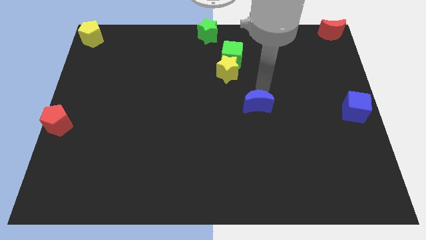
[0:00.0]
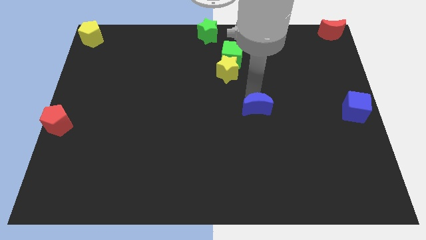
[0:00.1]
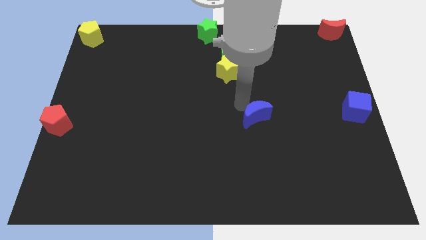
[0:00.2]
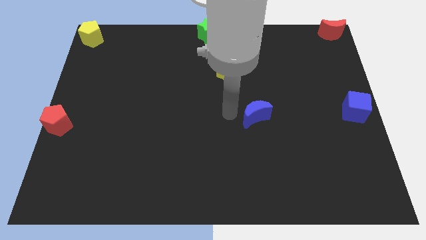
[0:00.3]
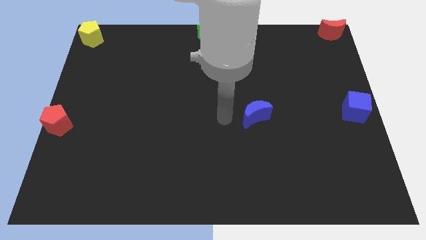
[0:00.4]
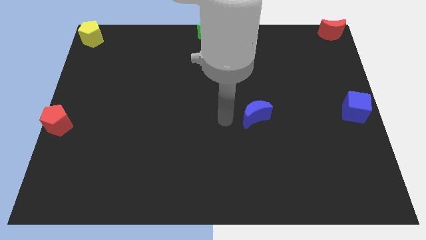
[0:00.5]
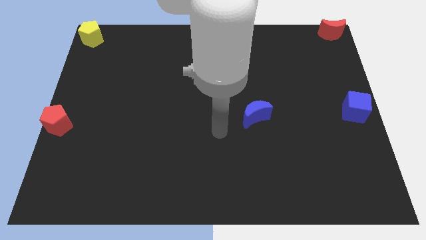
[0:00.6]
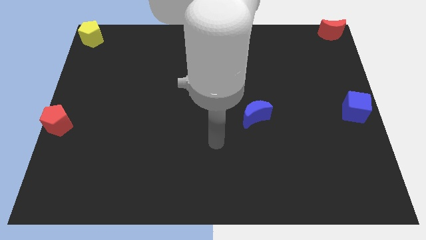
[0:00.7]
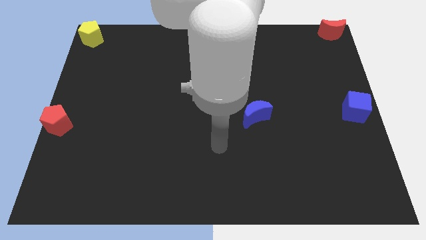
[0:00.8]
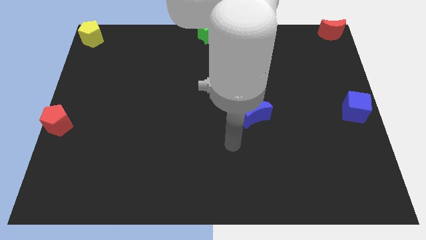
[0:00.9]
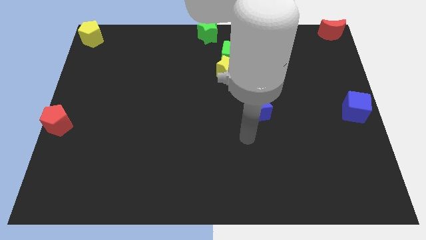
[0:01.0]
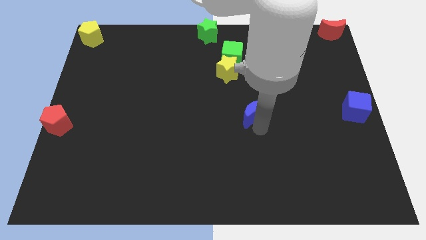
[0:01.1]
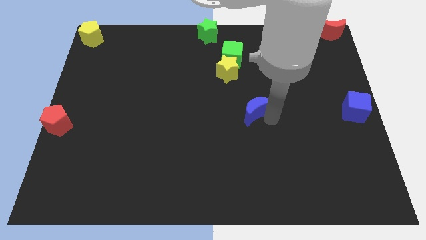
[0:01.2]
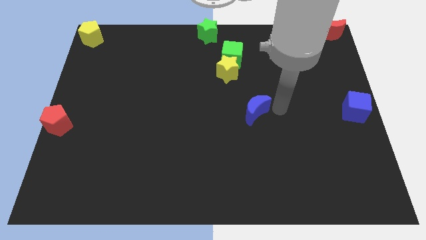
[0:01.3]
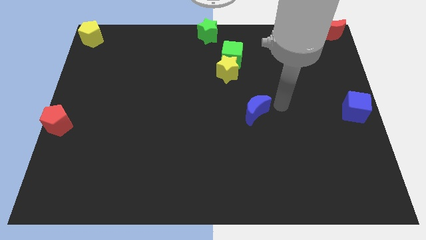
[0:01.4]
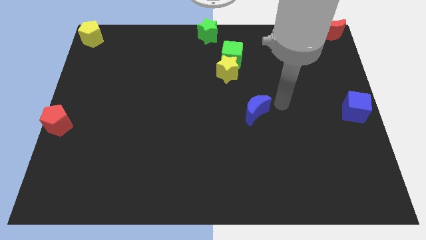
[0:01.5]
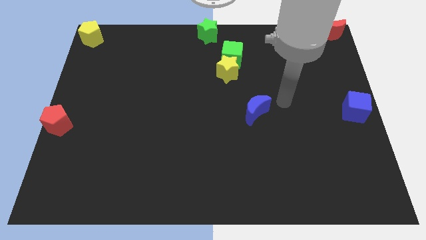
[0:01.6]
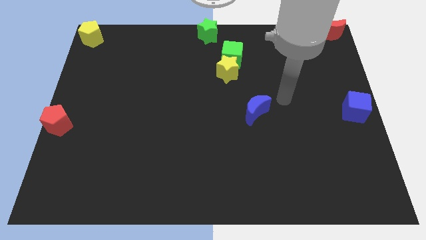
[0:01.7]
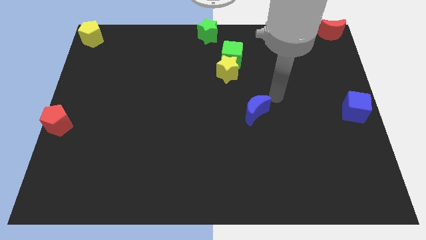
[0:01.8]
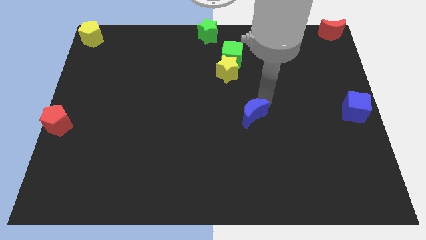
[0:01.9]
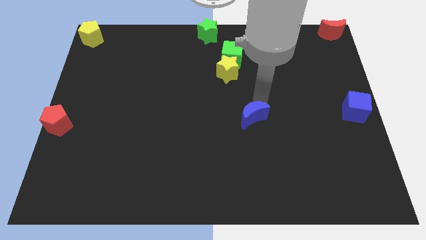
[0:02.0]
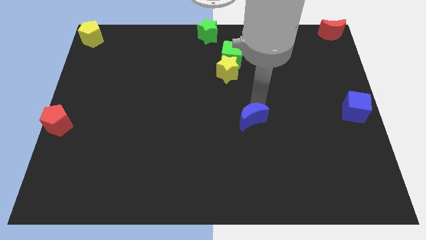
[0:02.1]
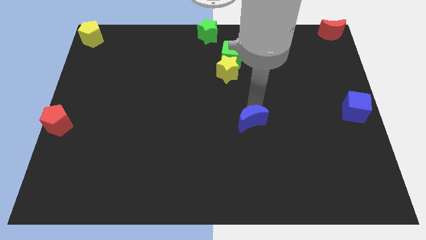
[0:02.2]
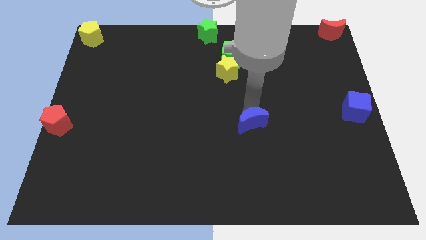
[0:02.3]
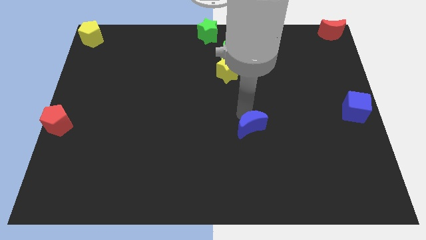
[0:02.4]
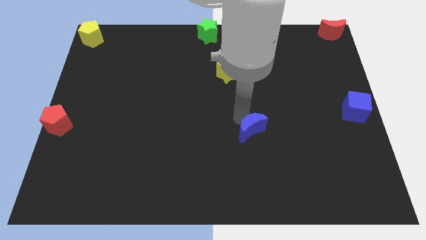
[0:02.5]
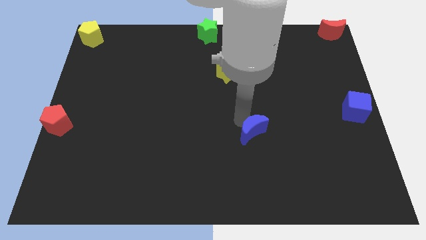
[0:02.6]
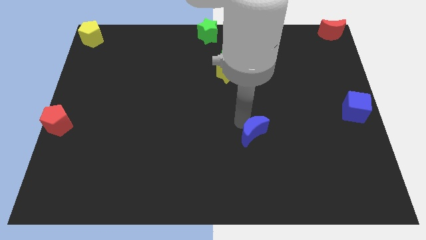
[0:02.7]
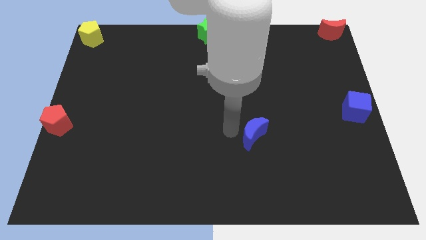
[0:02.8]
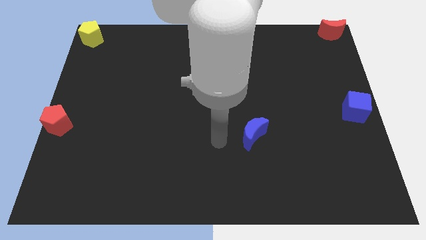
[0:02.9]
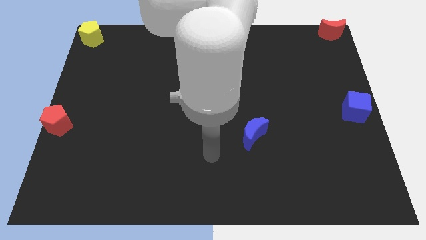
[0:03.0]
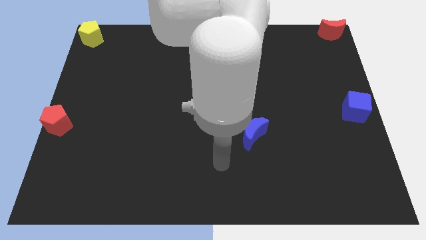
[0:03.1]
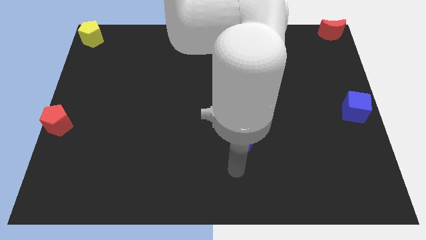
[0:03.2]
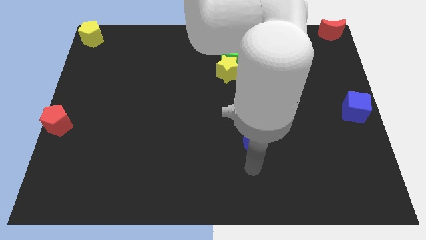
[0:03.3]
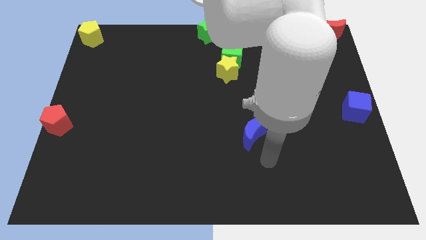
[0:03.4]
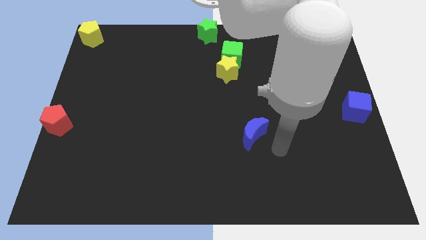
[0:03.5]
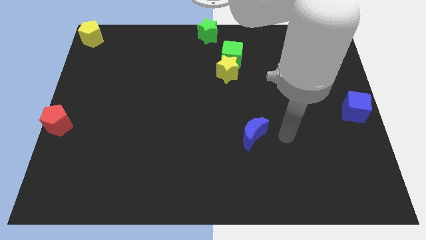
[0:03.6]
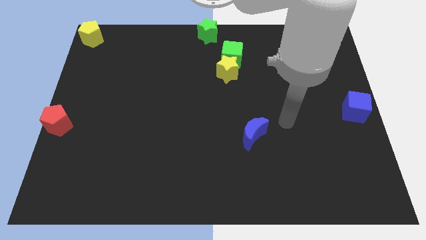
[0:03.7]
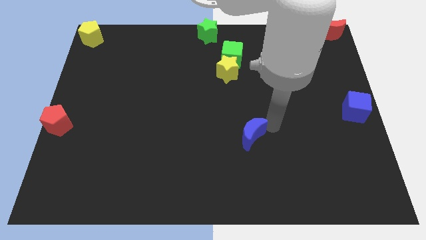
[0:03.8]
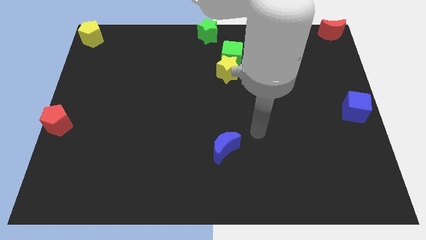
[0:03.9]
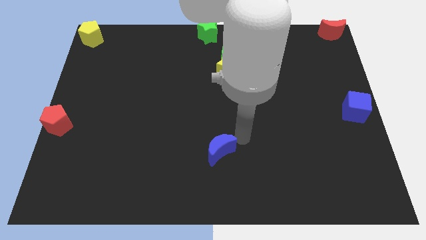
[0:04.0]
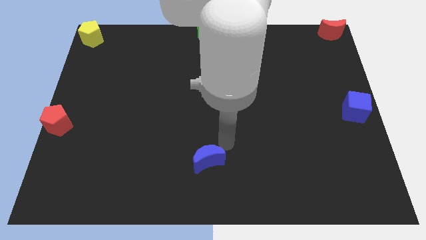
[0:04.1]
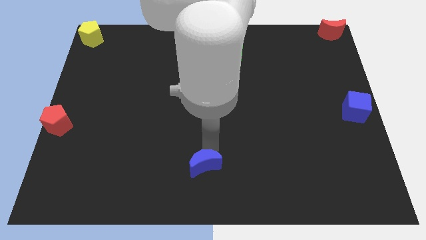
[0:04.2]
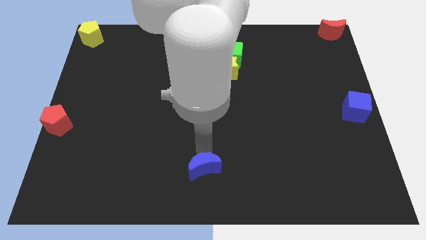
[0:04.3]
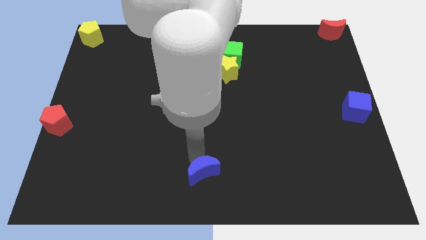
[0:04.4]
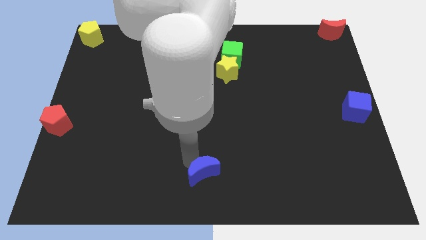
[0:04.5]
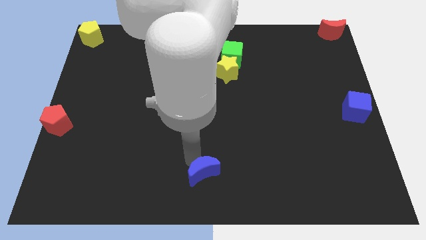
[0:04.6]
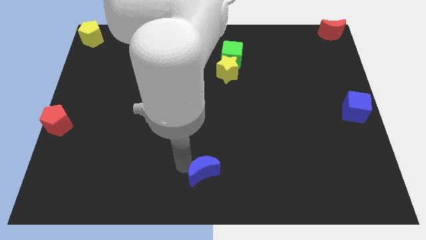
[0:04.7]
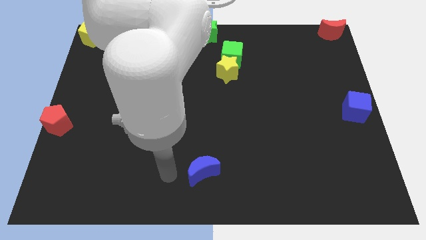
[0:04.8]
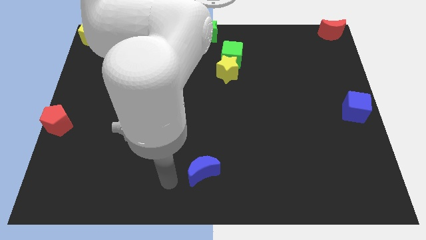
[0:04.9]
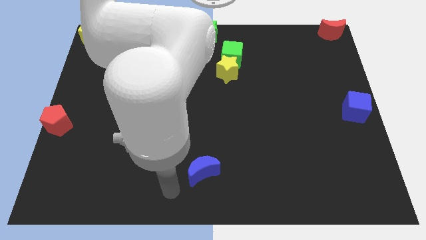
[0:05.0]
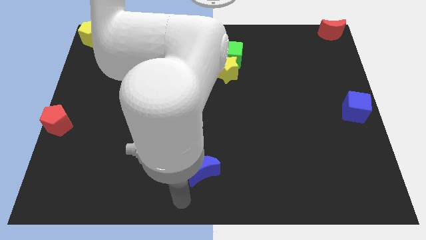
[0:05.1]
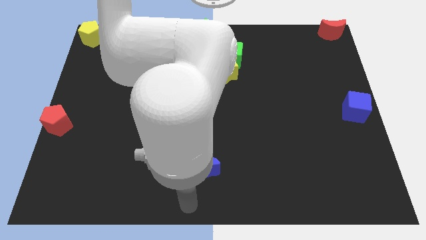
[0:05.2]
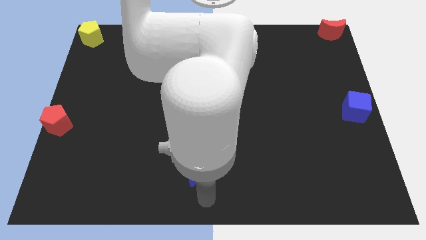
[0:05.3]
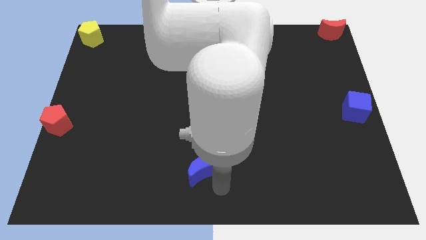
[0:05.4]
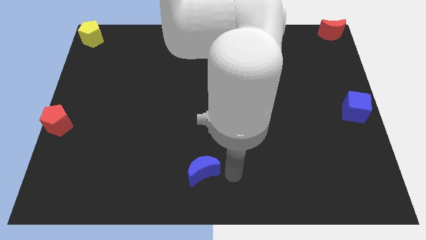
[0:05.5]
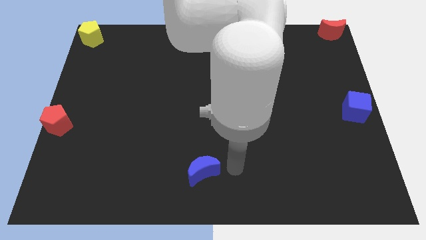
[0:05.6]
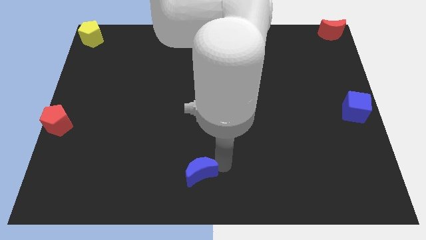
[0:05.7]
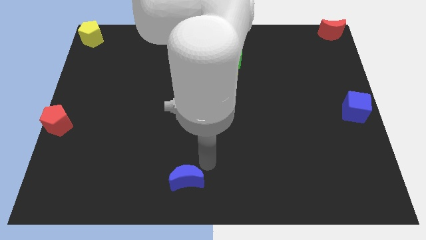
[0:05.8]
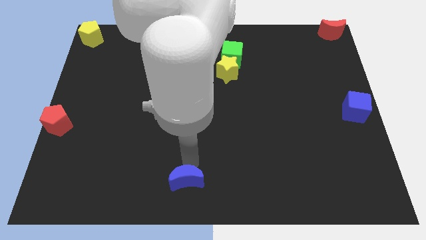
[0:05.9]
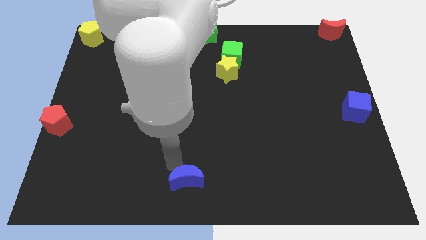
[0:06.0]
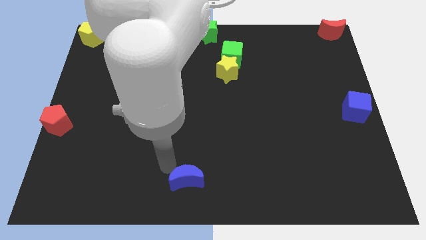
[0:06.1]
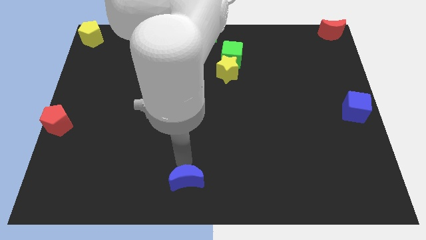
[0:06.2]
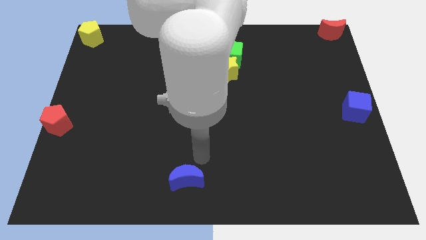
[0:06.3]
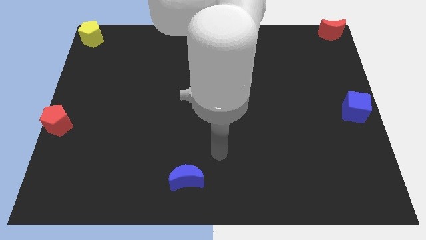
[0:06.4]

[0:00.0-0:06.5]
move the blue crescent to the bottom center of the board

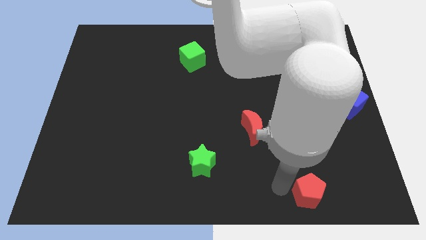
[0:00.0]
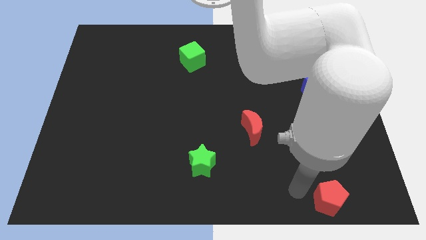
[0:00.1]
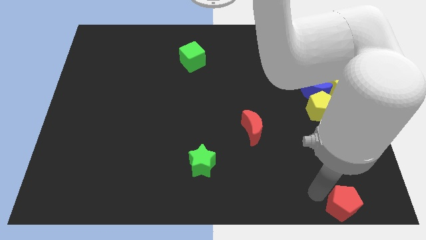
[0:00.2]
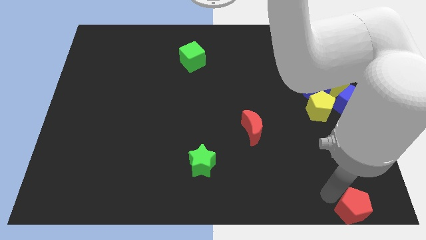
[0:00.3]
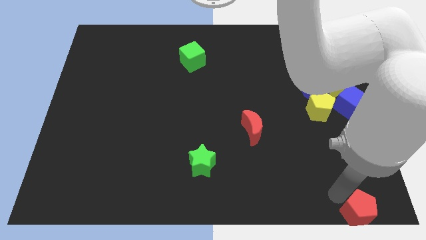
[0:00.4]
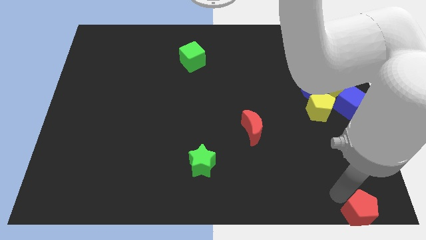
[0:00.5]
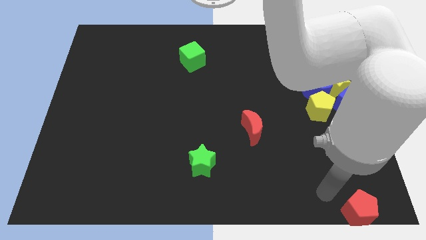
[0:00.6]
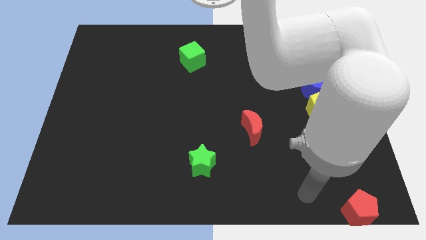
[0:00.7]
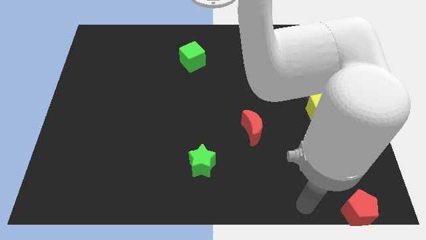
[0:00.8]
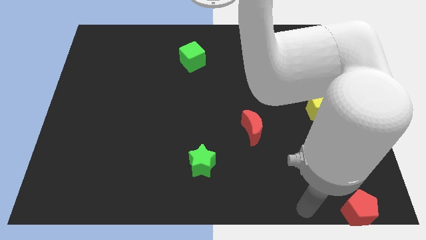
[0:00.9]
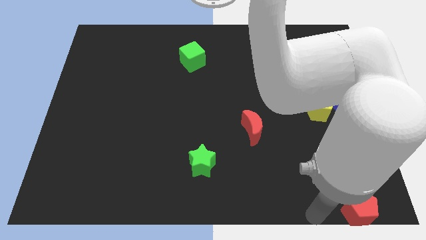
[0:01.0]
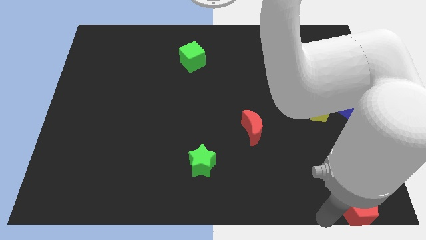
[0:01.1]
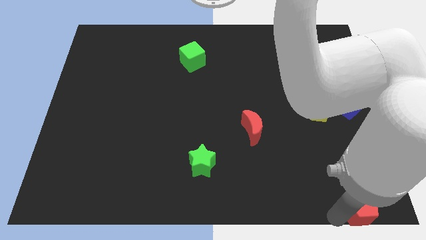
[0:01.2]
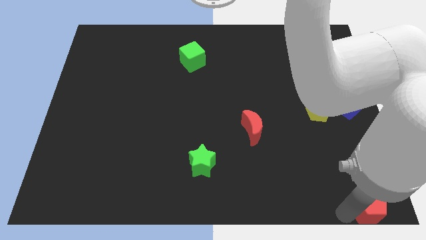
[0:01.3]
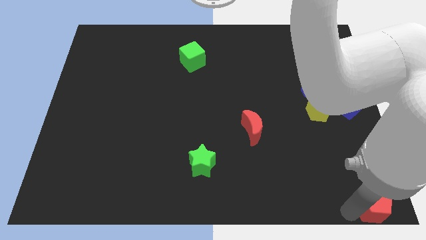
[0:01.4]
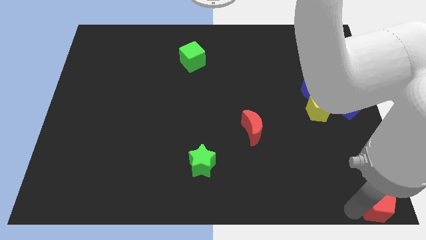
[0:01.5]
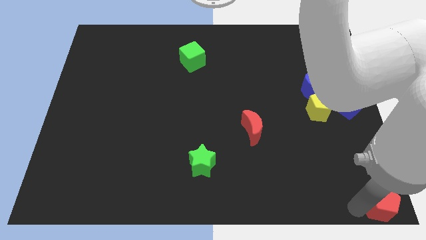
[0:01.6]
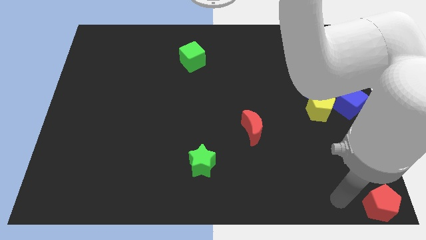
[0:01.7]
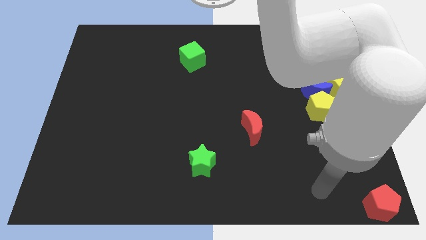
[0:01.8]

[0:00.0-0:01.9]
move the red pentagon to the bottom right corner

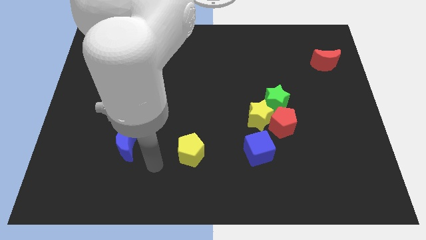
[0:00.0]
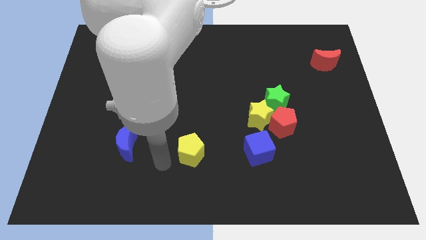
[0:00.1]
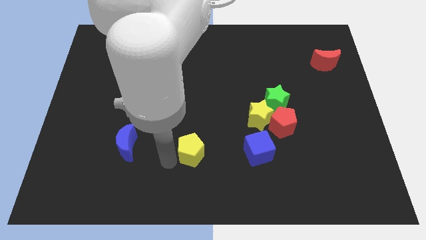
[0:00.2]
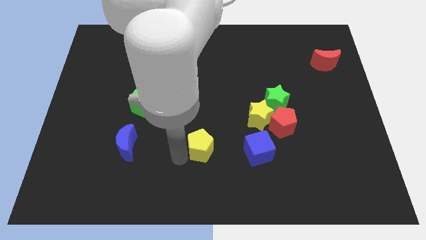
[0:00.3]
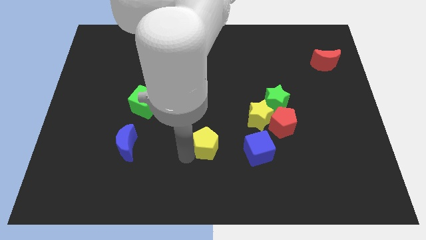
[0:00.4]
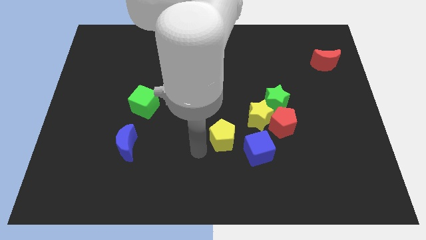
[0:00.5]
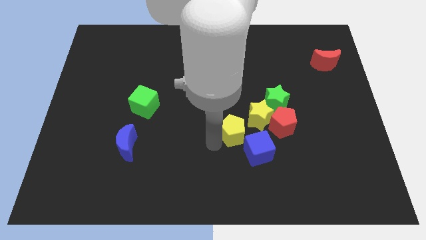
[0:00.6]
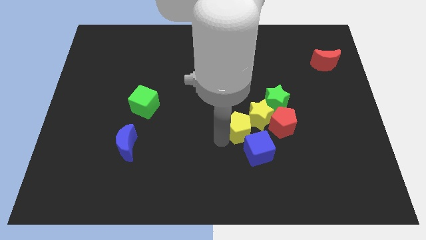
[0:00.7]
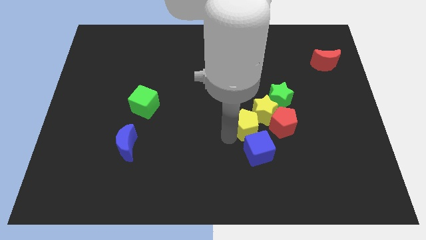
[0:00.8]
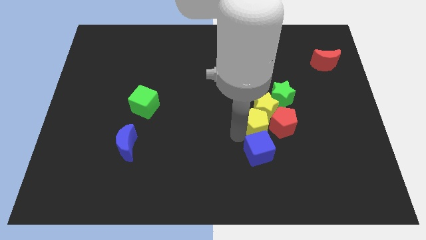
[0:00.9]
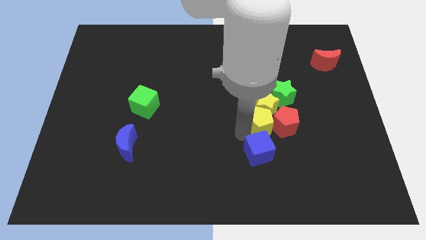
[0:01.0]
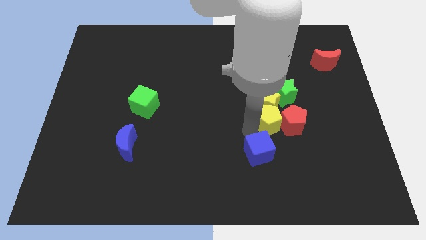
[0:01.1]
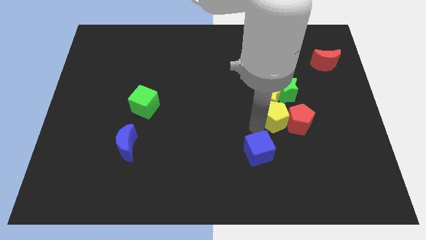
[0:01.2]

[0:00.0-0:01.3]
push the yellow star into yellow pentagon
